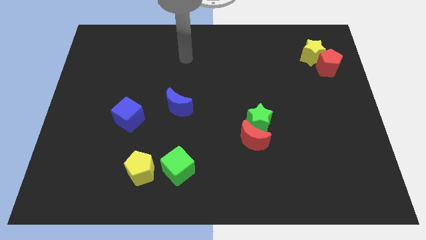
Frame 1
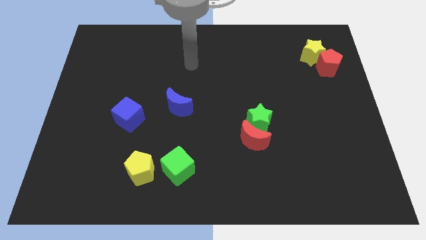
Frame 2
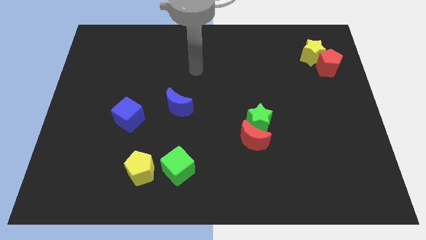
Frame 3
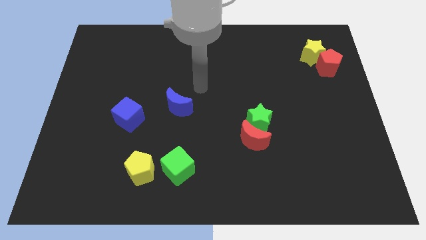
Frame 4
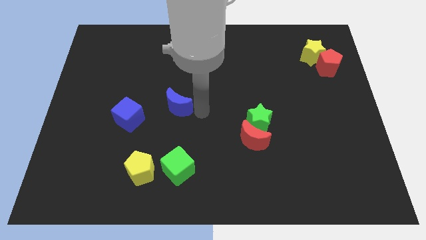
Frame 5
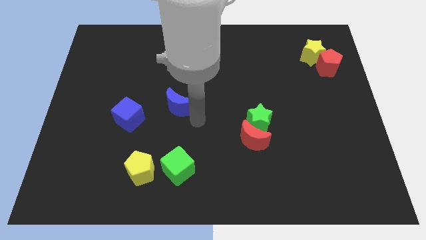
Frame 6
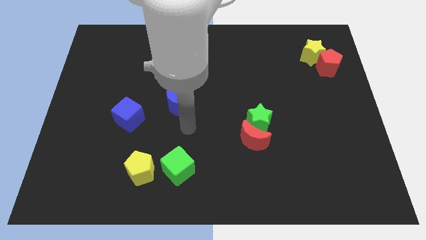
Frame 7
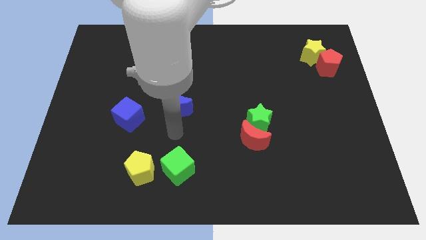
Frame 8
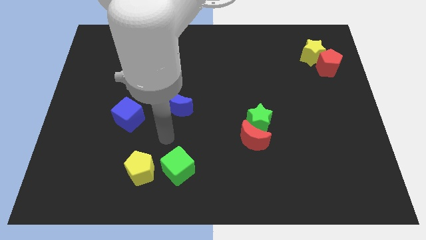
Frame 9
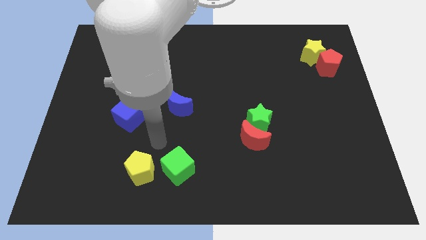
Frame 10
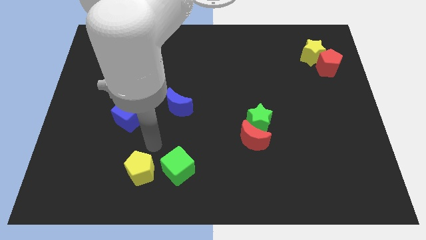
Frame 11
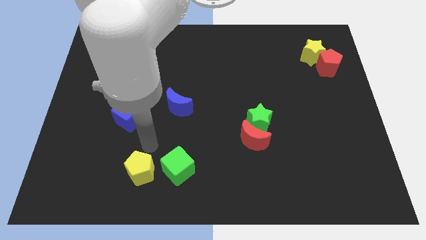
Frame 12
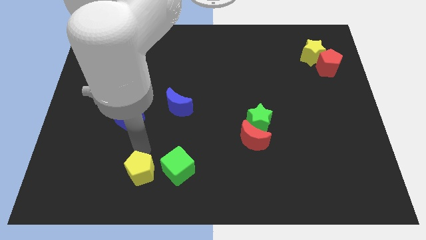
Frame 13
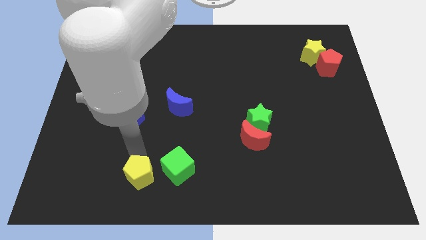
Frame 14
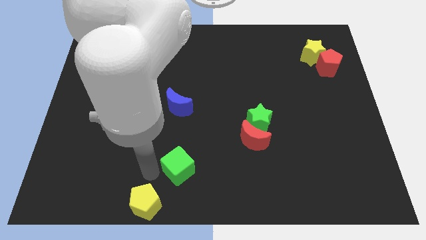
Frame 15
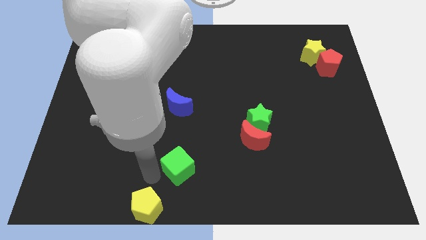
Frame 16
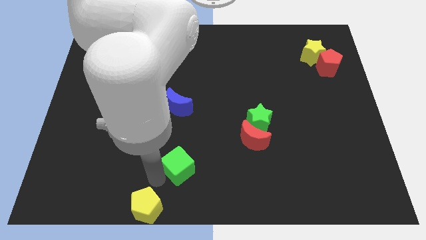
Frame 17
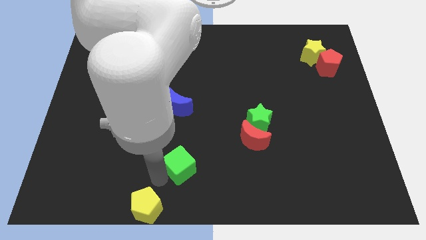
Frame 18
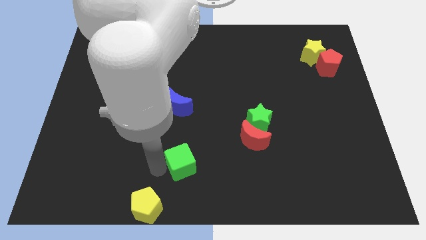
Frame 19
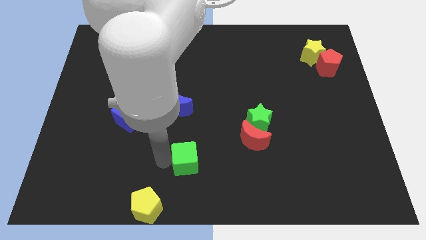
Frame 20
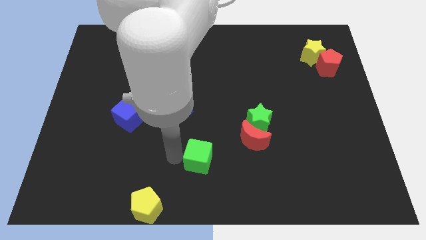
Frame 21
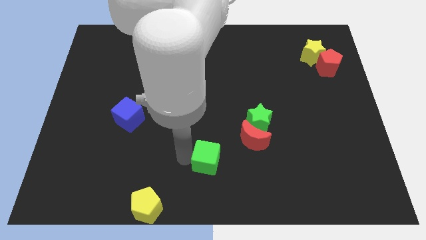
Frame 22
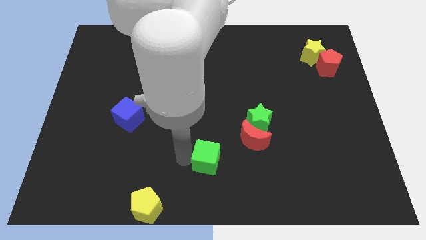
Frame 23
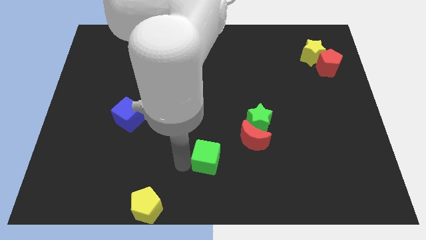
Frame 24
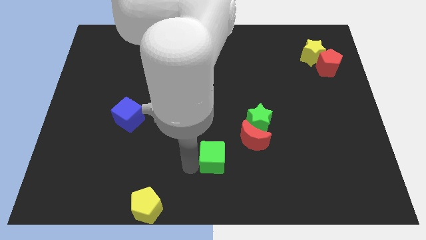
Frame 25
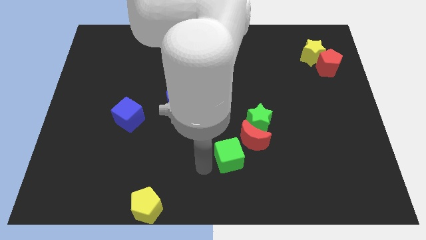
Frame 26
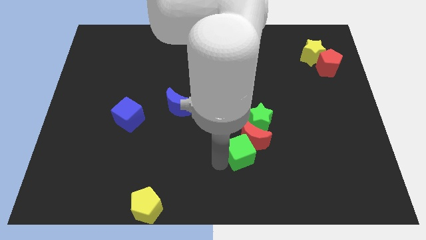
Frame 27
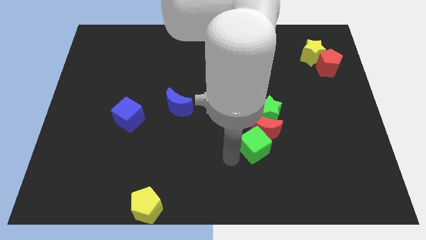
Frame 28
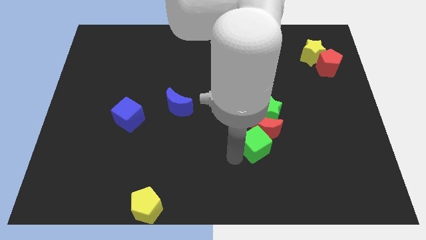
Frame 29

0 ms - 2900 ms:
put the green cube to the red moon

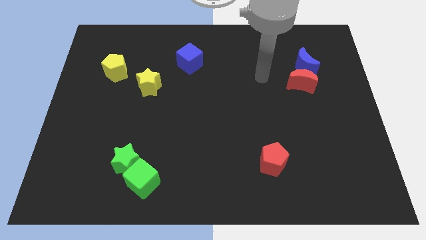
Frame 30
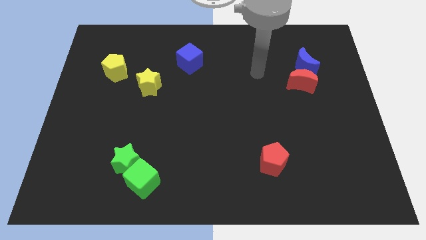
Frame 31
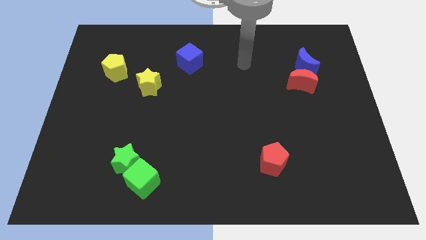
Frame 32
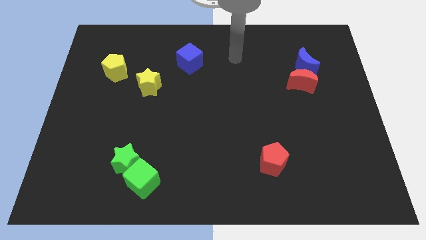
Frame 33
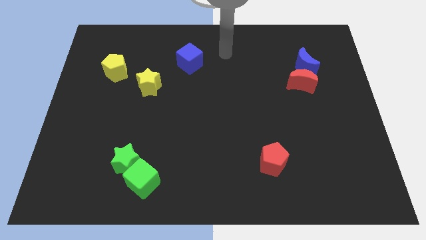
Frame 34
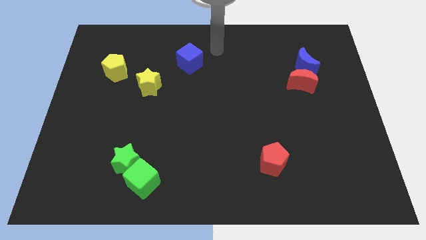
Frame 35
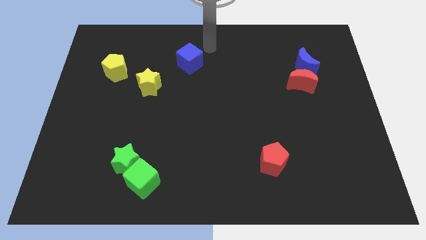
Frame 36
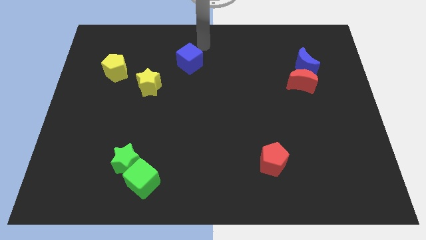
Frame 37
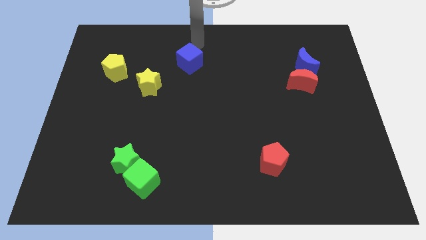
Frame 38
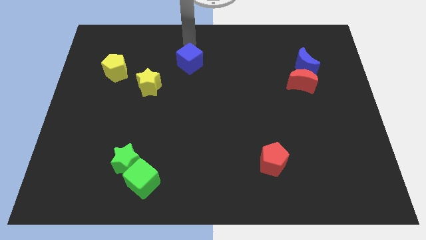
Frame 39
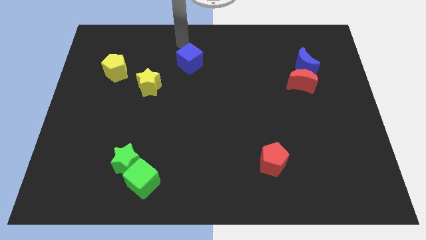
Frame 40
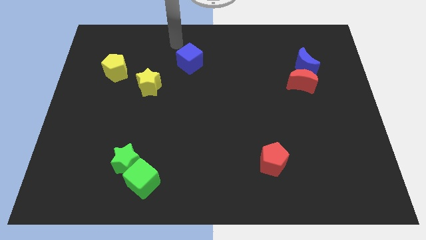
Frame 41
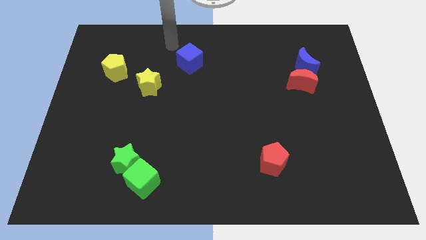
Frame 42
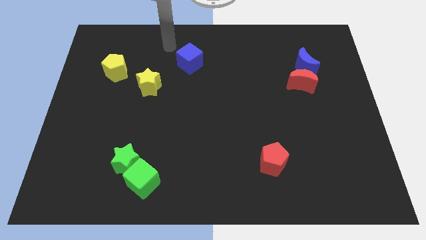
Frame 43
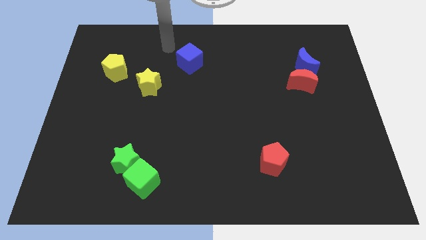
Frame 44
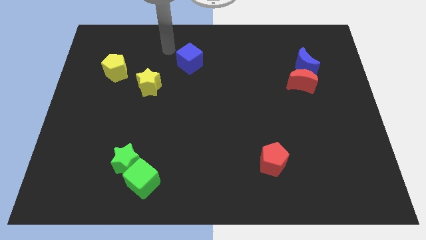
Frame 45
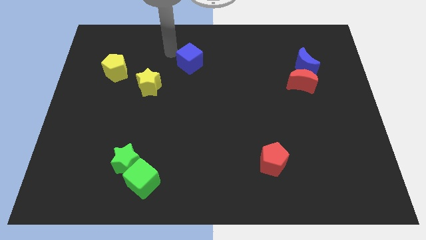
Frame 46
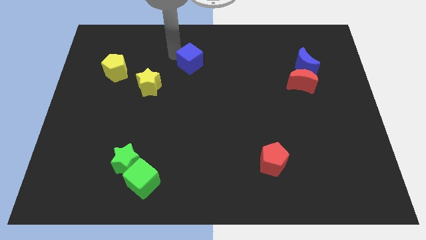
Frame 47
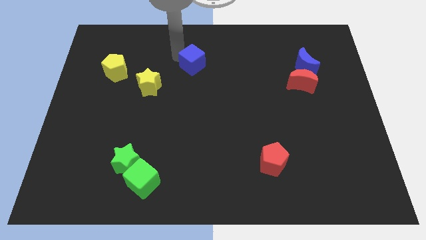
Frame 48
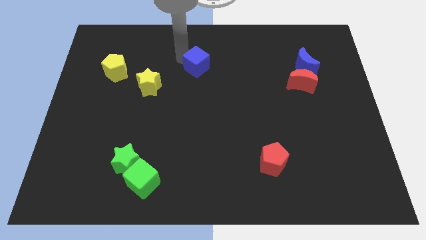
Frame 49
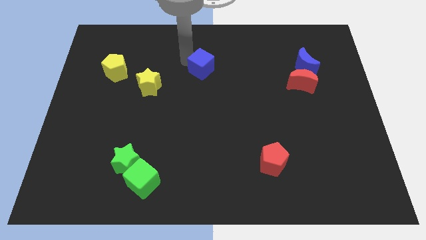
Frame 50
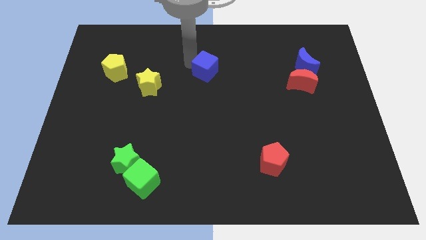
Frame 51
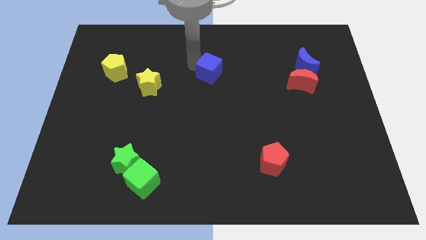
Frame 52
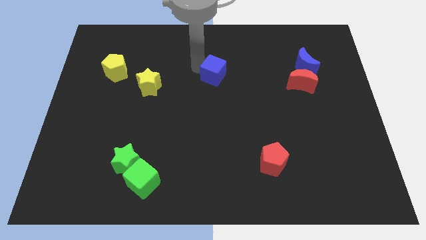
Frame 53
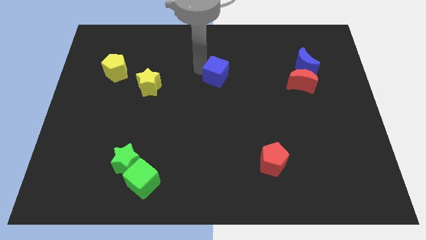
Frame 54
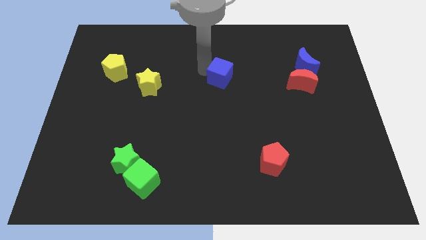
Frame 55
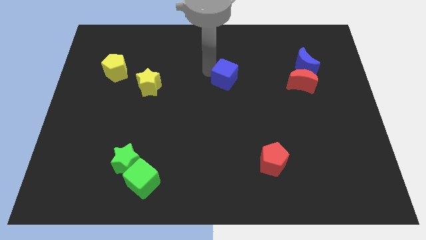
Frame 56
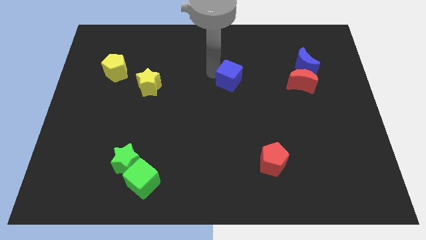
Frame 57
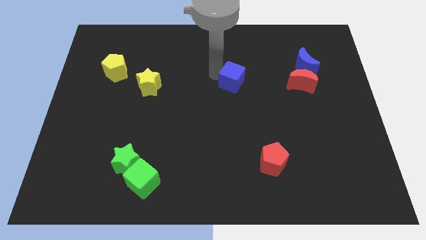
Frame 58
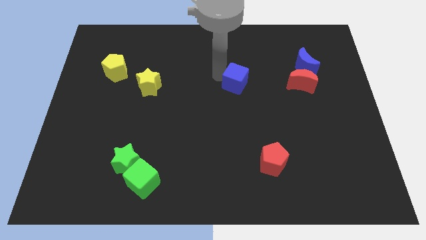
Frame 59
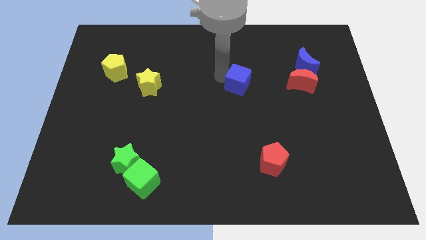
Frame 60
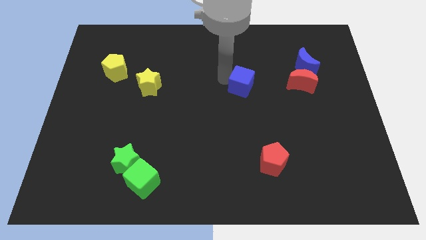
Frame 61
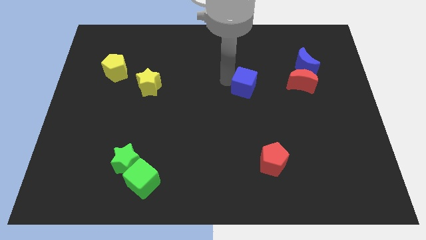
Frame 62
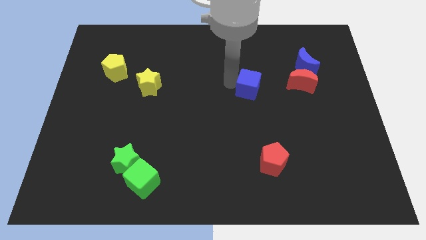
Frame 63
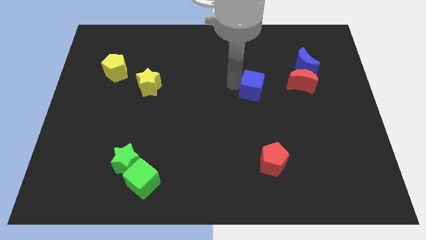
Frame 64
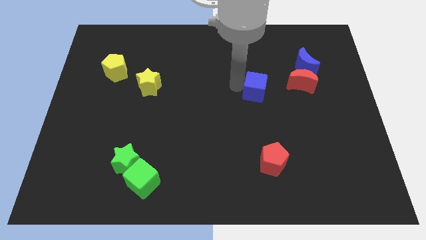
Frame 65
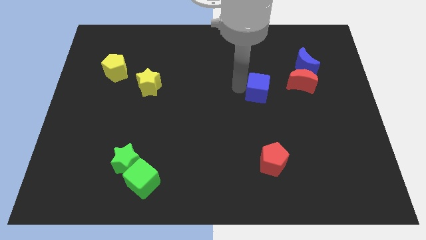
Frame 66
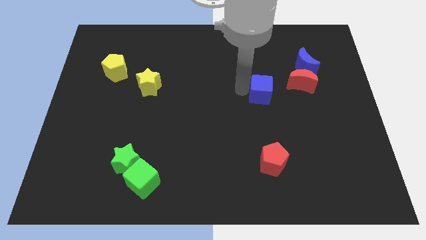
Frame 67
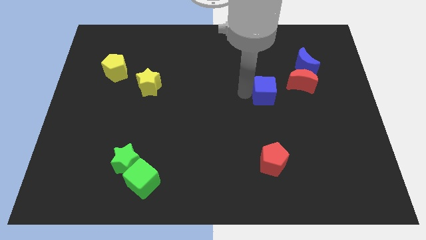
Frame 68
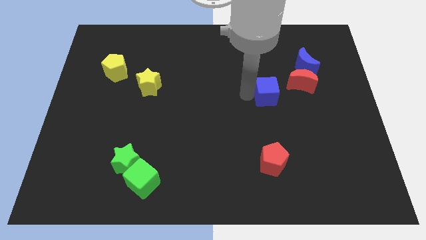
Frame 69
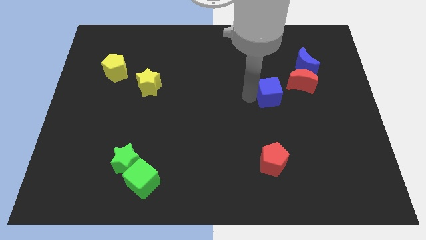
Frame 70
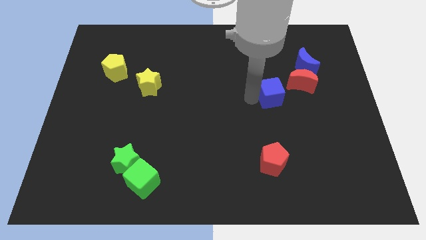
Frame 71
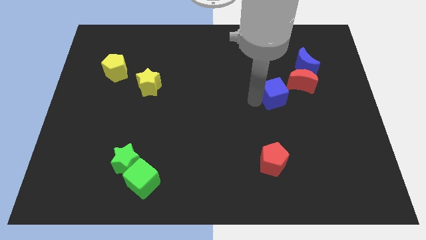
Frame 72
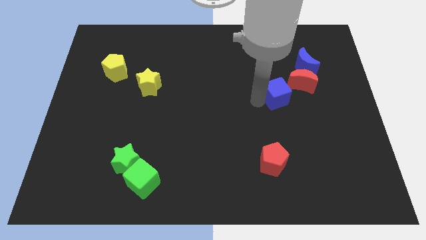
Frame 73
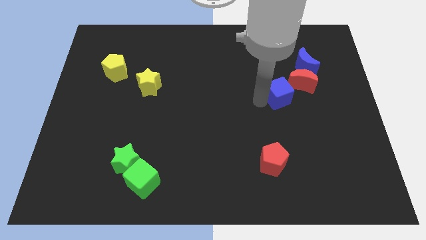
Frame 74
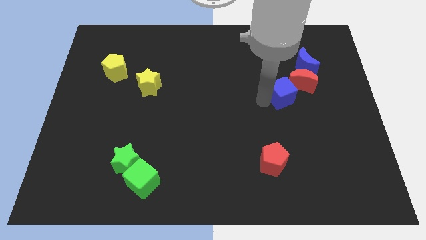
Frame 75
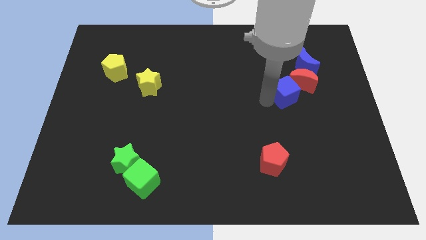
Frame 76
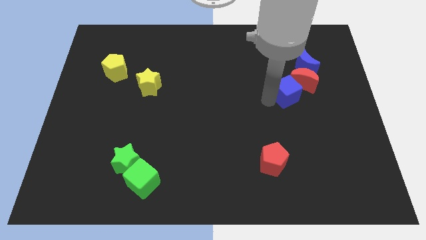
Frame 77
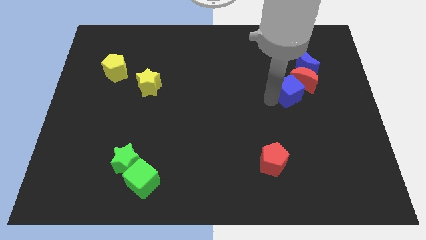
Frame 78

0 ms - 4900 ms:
push the blue cube towards the red moon

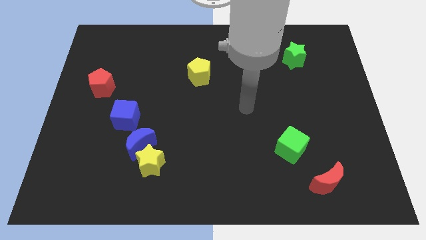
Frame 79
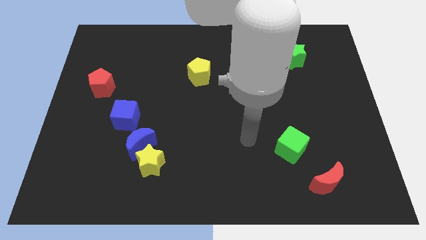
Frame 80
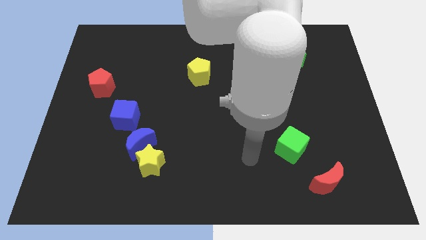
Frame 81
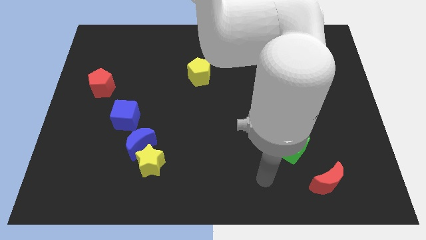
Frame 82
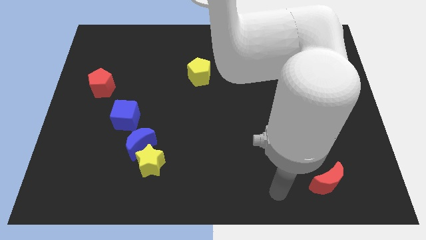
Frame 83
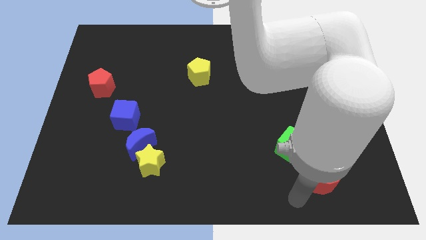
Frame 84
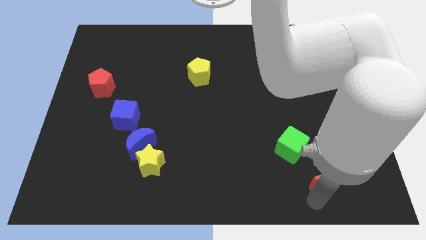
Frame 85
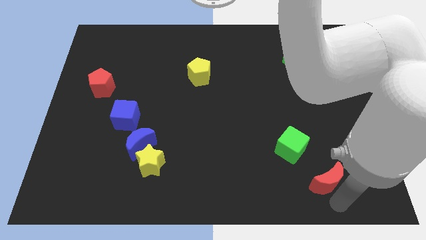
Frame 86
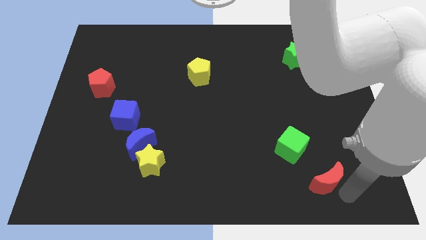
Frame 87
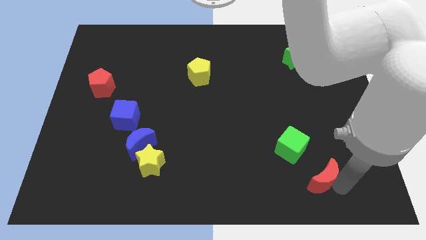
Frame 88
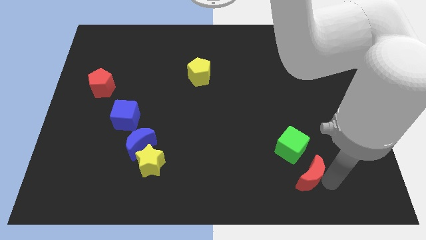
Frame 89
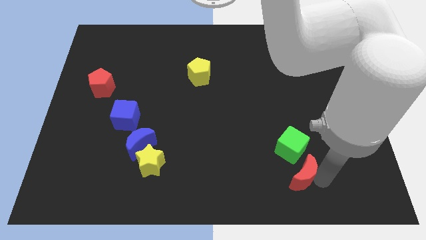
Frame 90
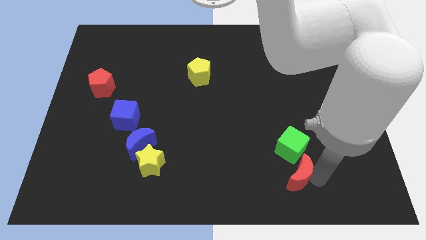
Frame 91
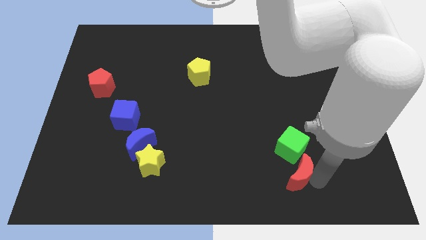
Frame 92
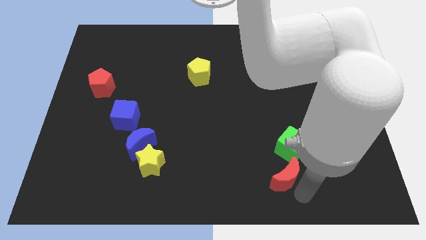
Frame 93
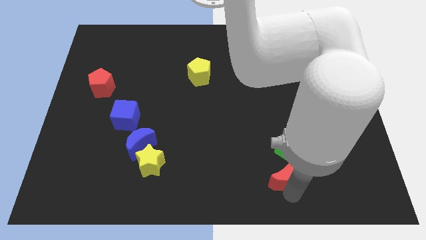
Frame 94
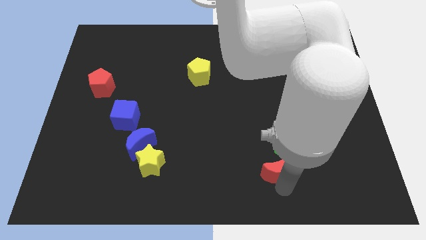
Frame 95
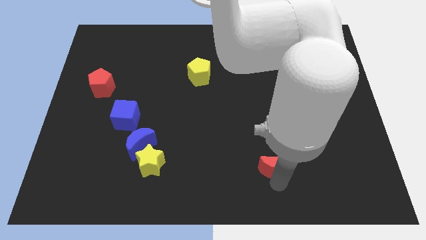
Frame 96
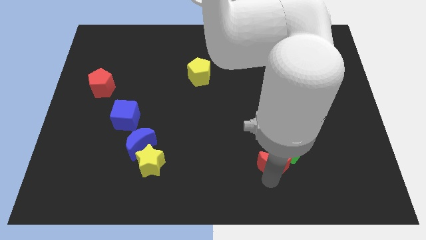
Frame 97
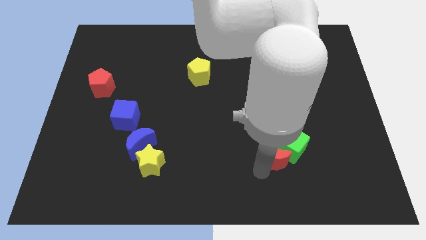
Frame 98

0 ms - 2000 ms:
put the red moon to the green cube
